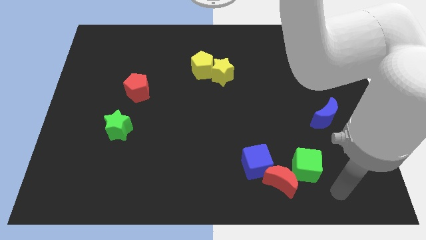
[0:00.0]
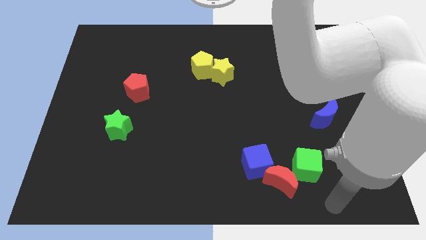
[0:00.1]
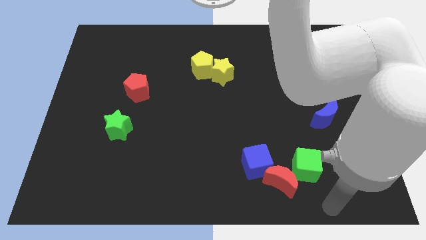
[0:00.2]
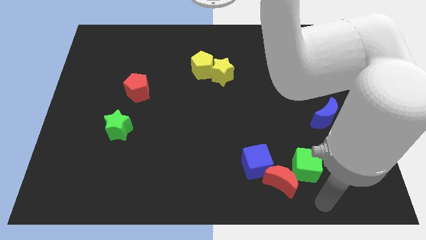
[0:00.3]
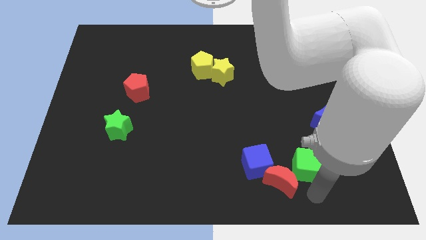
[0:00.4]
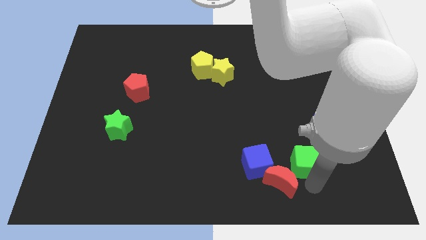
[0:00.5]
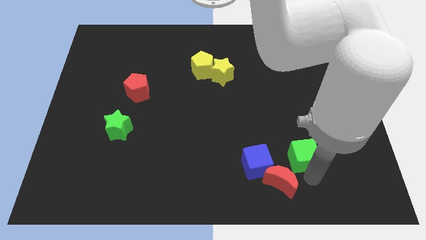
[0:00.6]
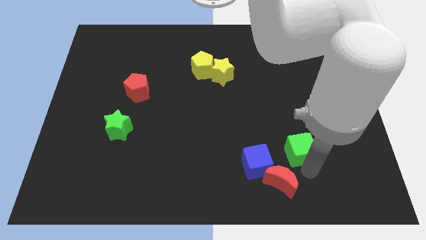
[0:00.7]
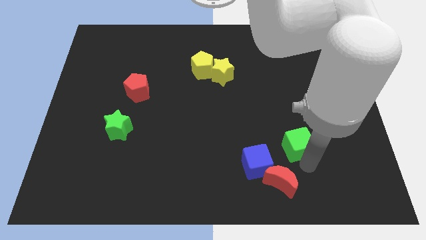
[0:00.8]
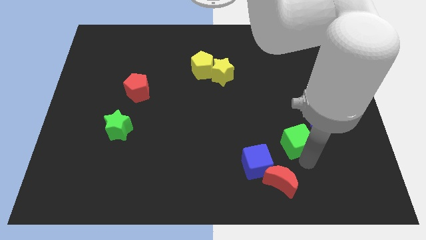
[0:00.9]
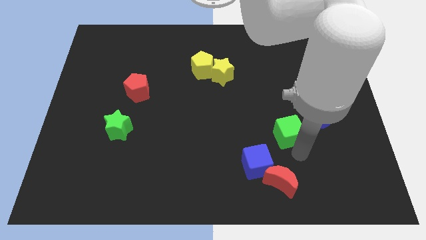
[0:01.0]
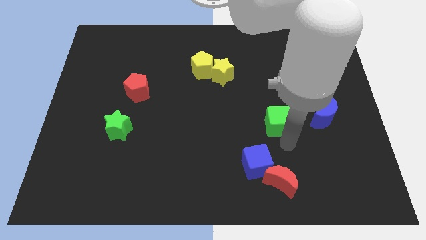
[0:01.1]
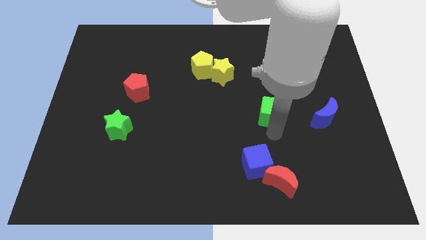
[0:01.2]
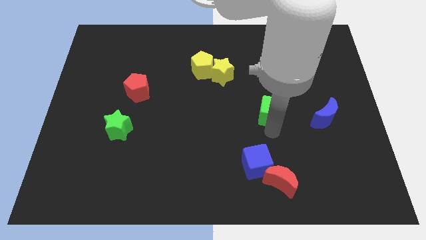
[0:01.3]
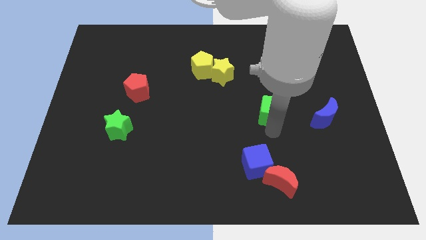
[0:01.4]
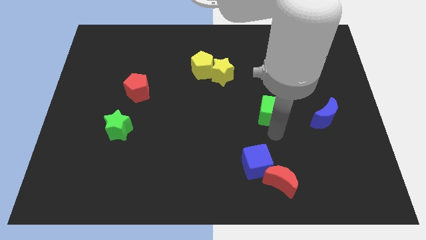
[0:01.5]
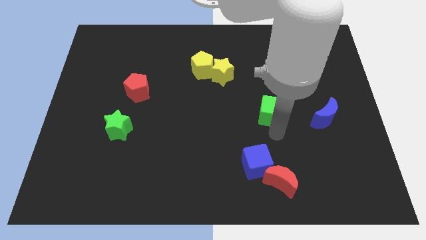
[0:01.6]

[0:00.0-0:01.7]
move the green cube away from the red crescent

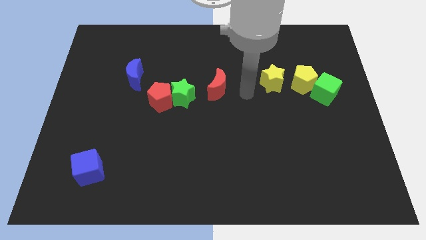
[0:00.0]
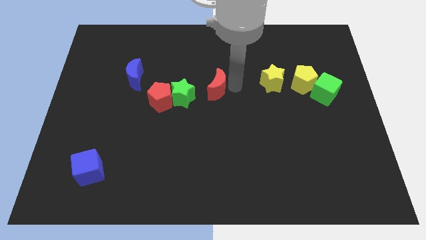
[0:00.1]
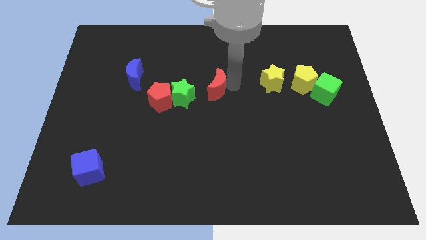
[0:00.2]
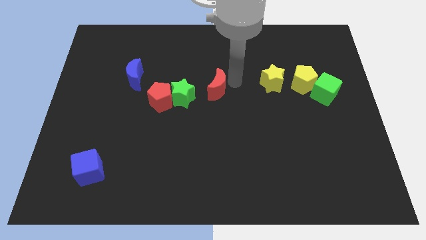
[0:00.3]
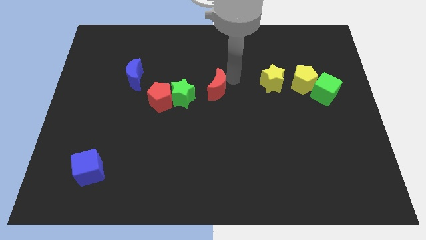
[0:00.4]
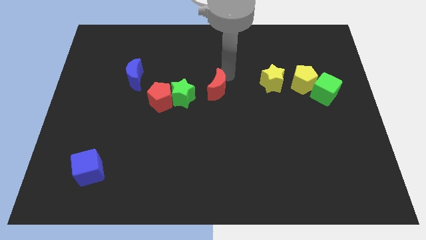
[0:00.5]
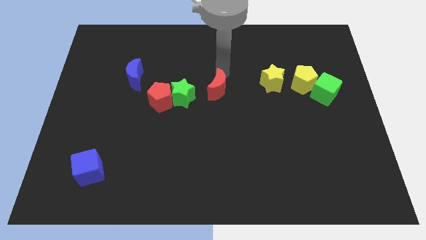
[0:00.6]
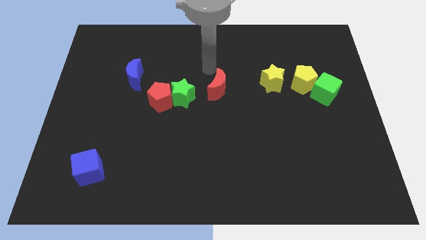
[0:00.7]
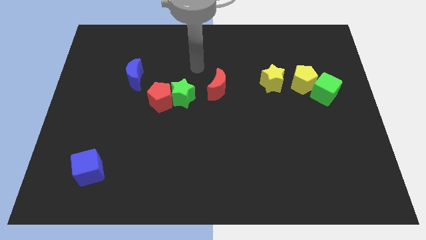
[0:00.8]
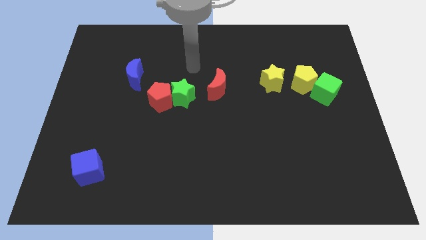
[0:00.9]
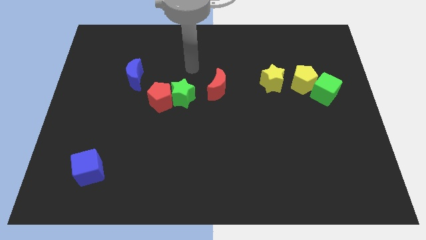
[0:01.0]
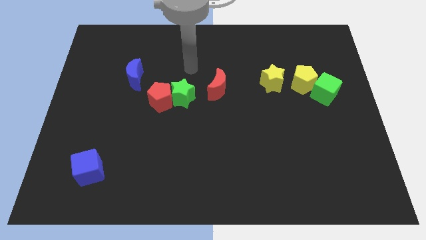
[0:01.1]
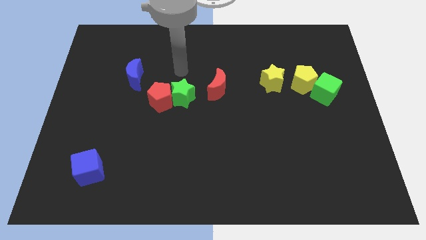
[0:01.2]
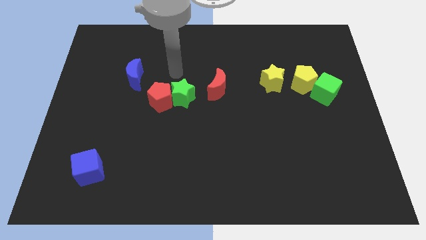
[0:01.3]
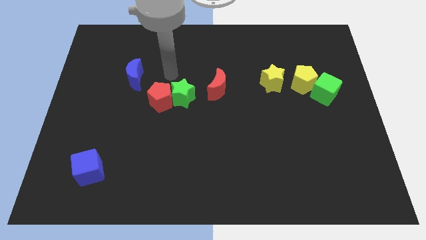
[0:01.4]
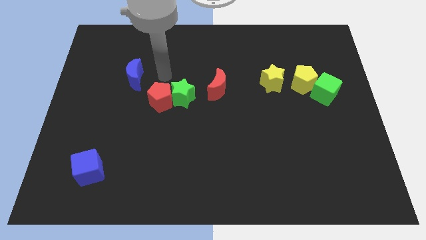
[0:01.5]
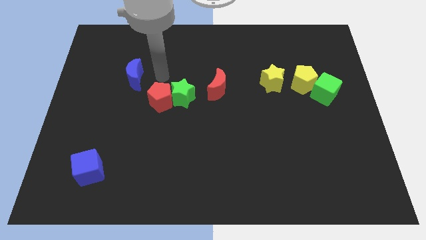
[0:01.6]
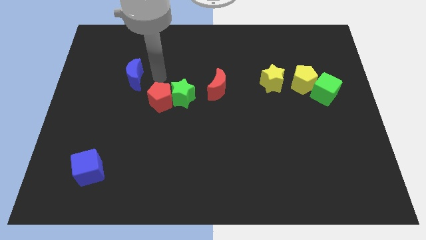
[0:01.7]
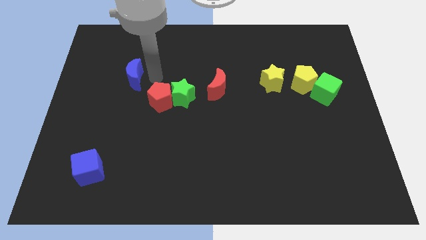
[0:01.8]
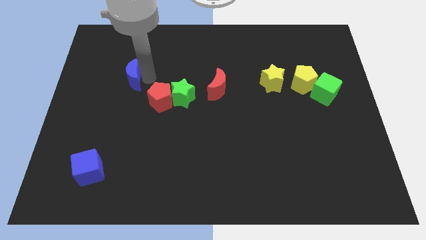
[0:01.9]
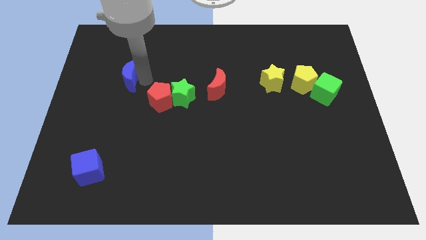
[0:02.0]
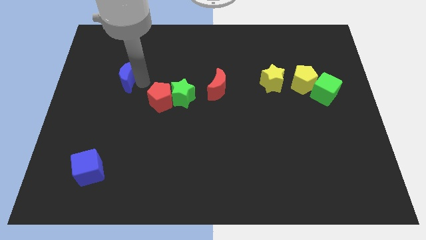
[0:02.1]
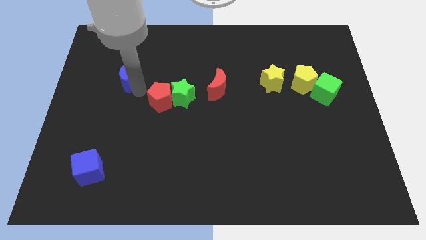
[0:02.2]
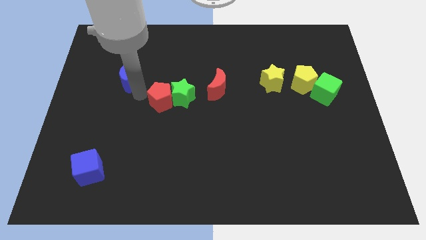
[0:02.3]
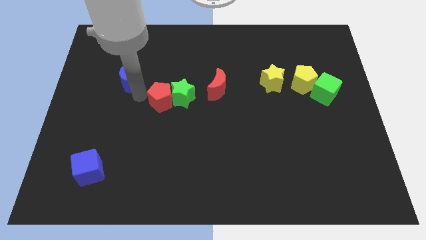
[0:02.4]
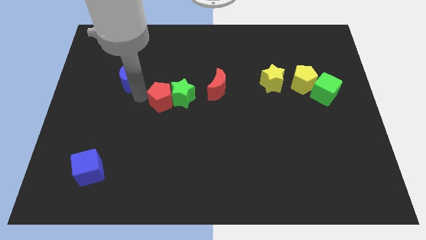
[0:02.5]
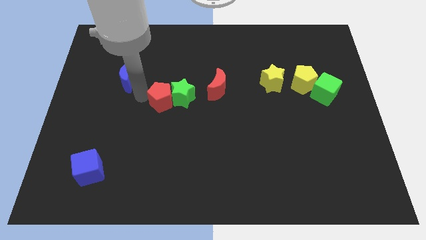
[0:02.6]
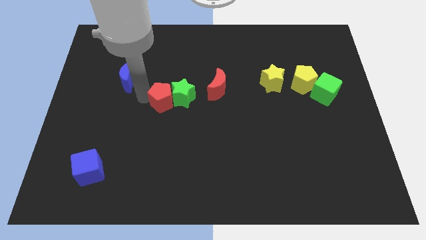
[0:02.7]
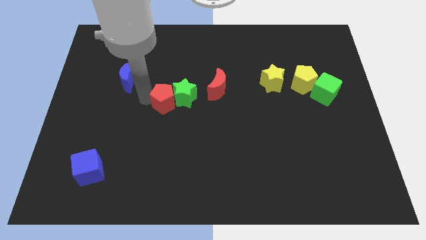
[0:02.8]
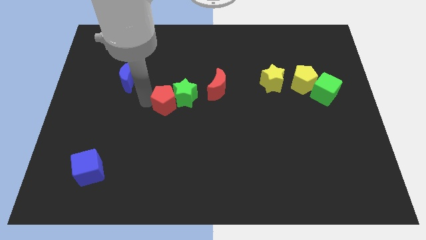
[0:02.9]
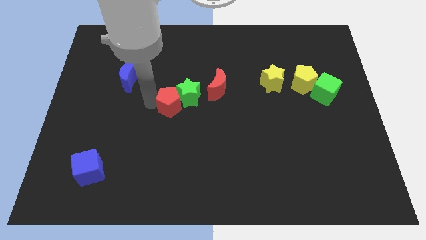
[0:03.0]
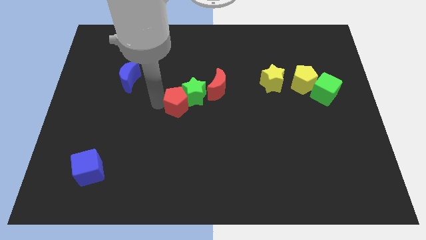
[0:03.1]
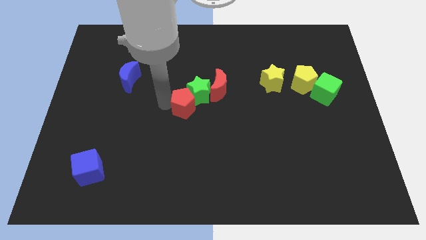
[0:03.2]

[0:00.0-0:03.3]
point your arm at the left of the red pentagon

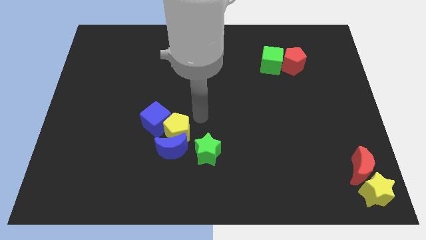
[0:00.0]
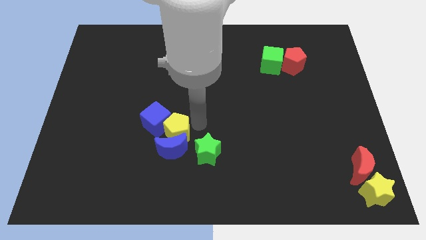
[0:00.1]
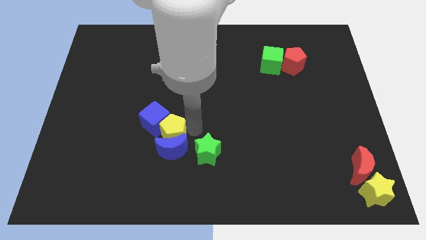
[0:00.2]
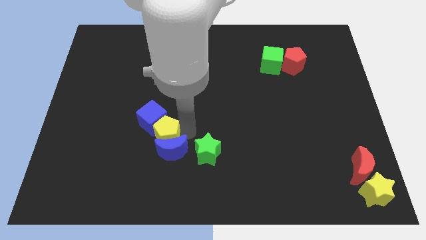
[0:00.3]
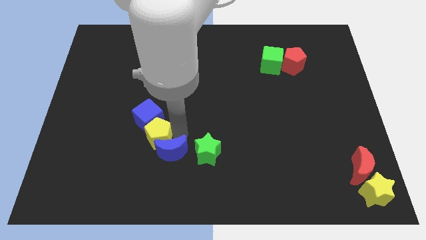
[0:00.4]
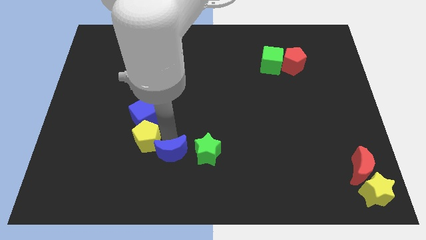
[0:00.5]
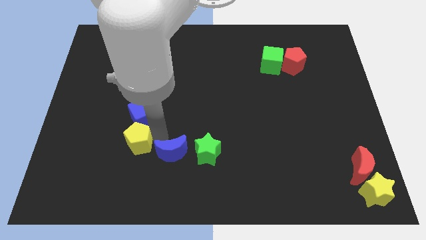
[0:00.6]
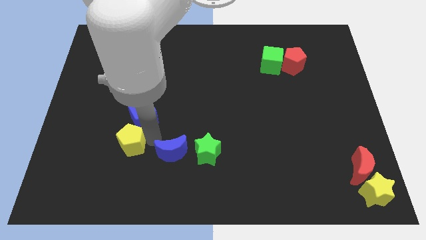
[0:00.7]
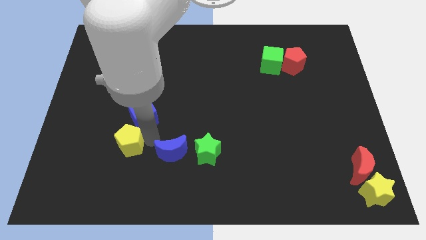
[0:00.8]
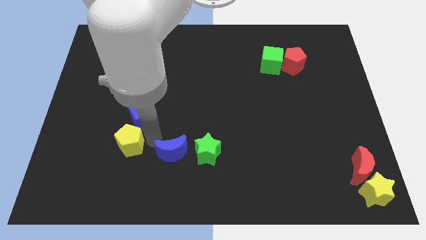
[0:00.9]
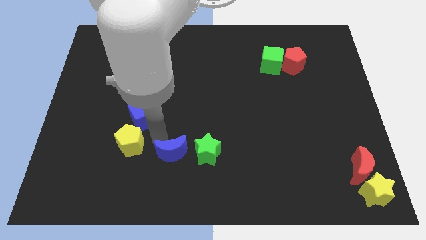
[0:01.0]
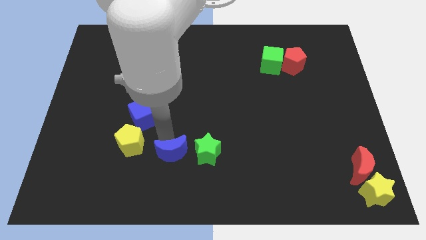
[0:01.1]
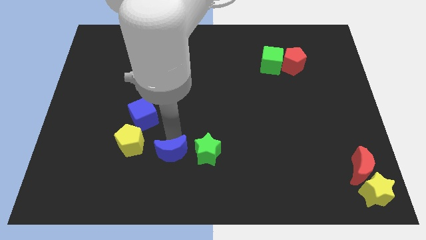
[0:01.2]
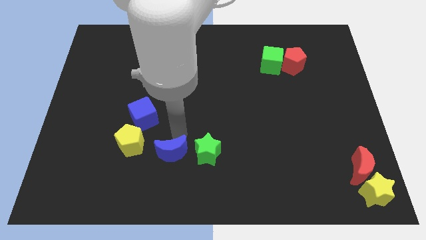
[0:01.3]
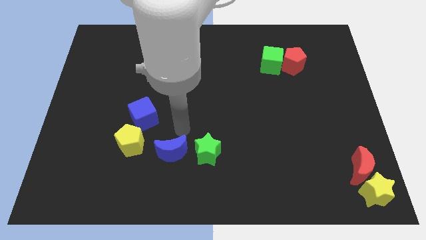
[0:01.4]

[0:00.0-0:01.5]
separate the yellow pentagon from the blue cube

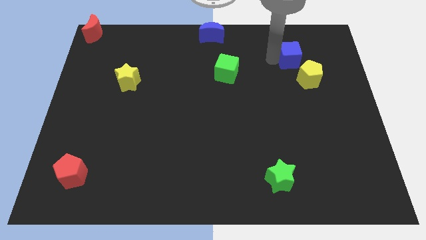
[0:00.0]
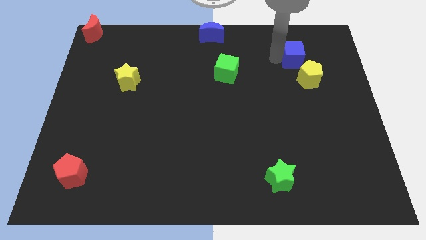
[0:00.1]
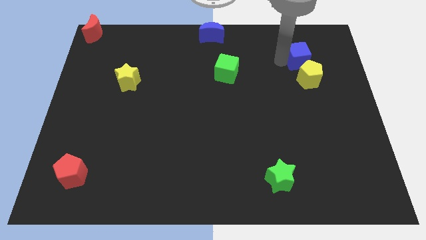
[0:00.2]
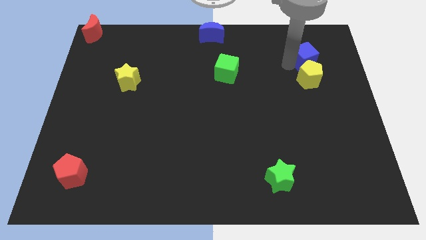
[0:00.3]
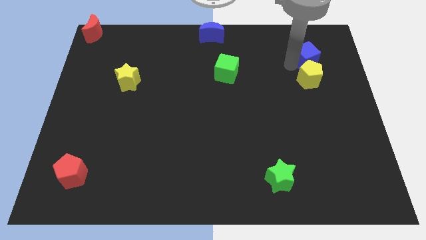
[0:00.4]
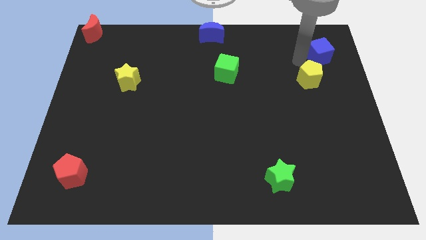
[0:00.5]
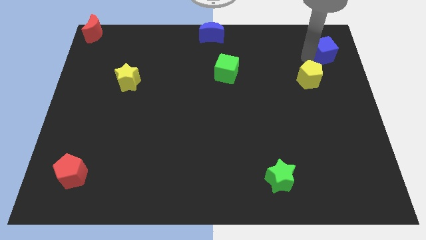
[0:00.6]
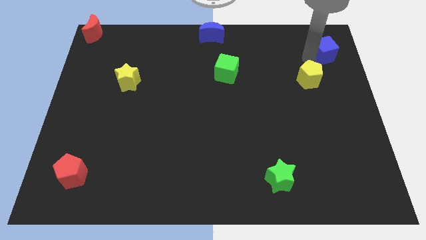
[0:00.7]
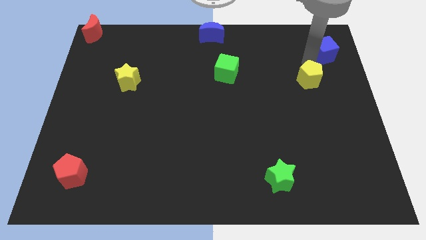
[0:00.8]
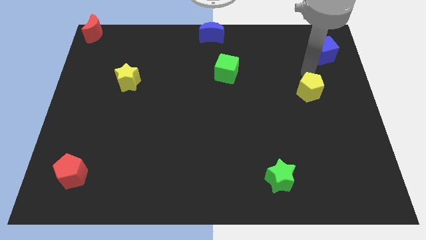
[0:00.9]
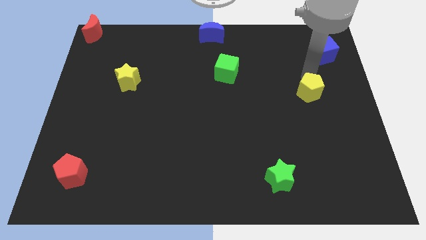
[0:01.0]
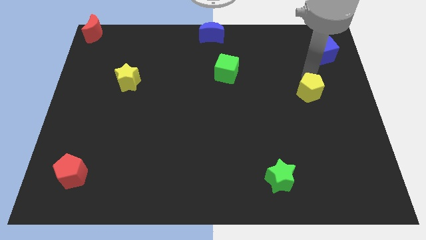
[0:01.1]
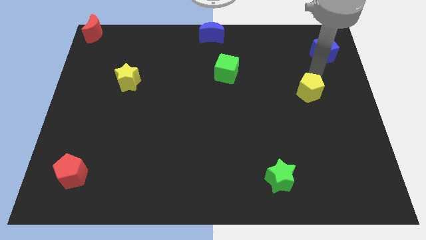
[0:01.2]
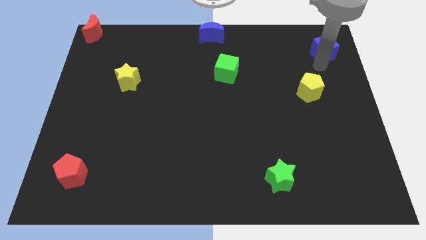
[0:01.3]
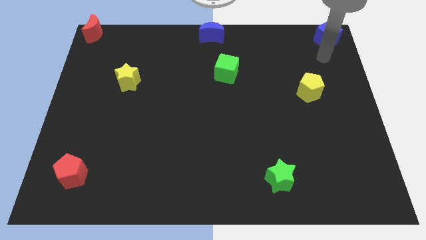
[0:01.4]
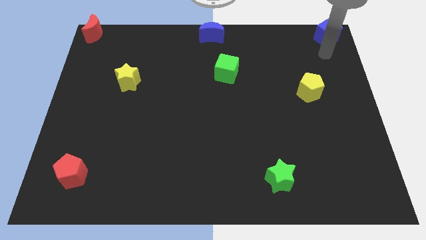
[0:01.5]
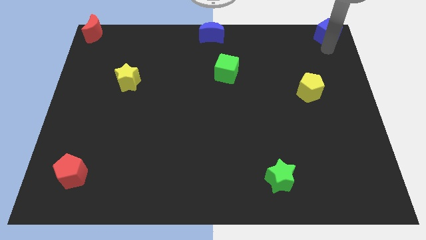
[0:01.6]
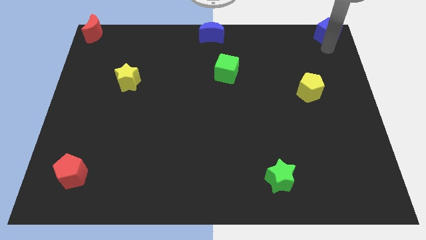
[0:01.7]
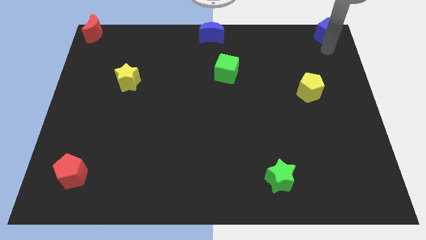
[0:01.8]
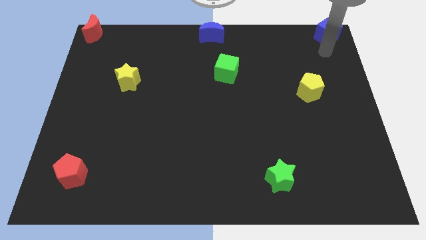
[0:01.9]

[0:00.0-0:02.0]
push the blue cube on the top right of the board

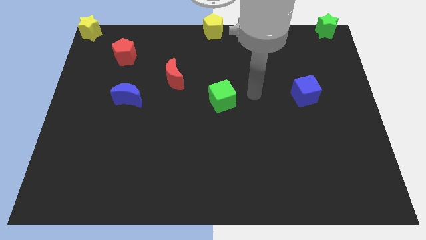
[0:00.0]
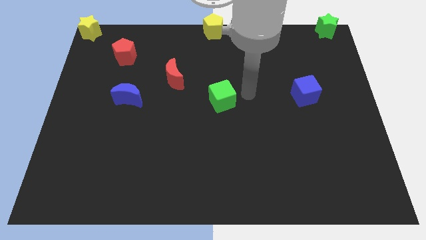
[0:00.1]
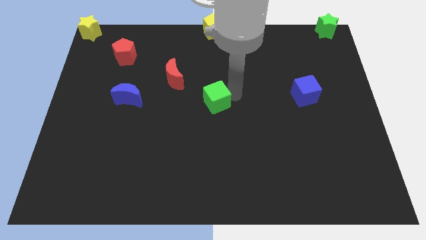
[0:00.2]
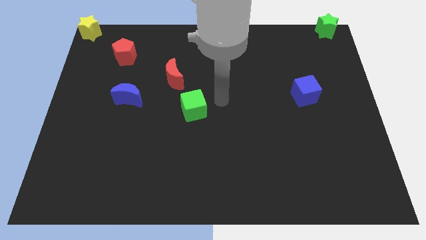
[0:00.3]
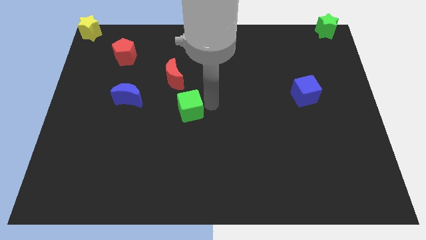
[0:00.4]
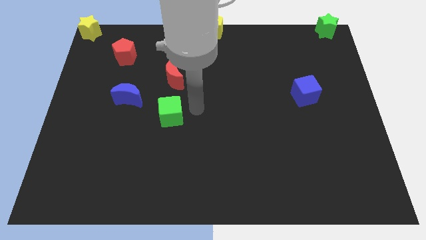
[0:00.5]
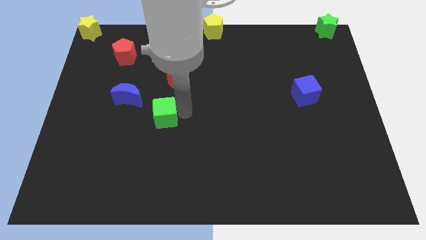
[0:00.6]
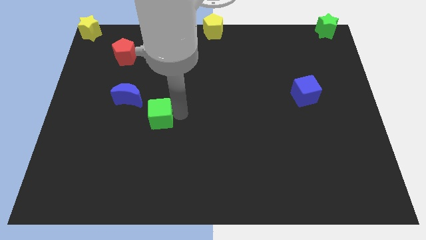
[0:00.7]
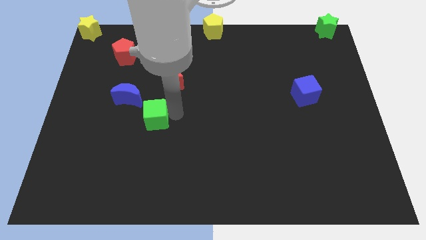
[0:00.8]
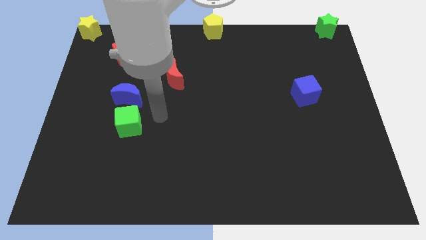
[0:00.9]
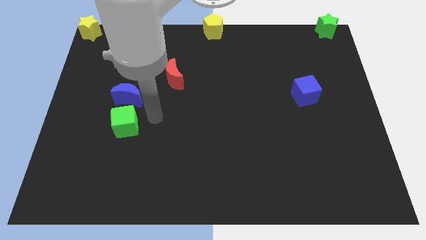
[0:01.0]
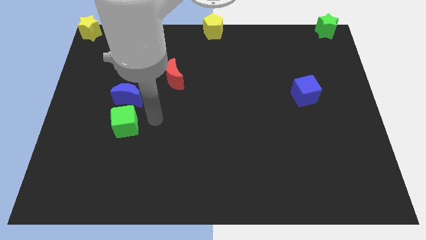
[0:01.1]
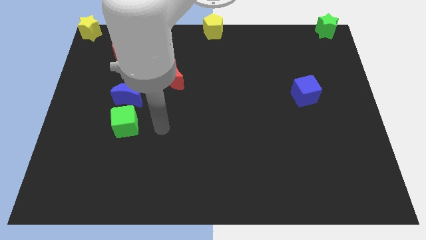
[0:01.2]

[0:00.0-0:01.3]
push the green cube below the blue moon
